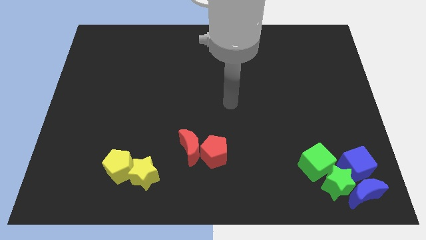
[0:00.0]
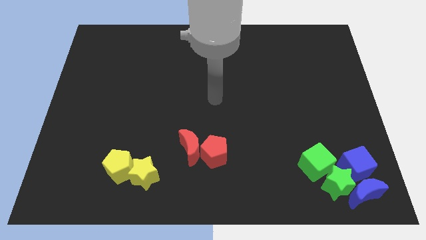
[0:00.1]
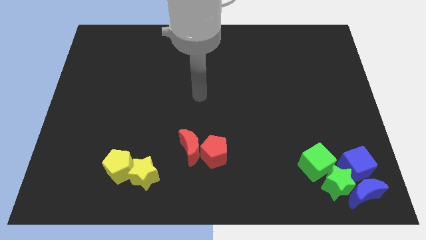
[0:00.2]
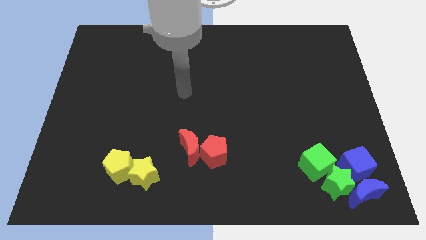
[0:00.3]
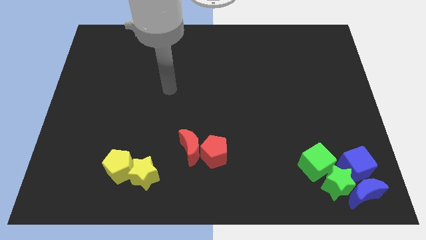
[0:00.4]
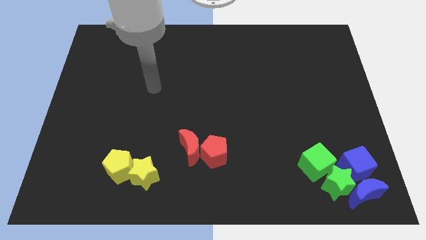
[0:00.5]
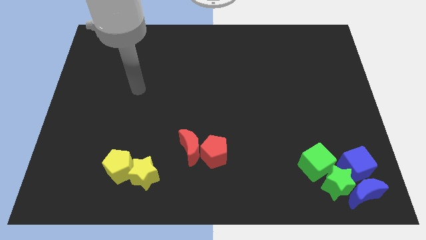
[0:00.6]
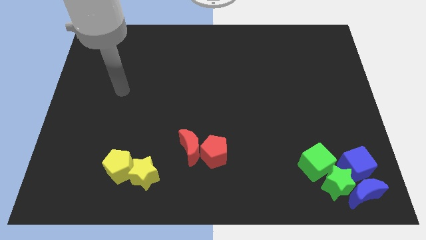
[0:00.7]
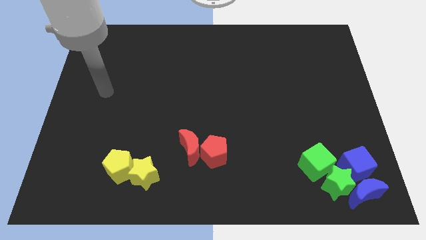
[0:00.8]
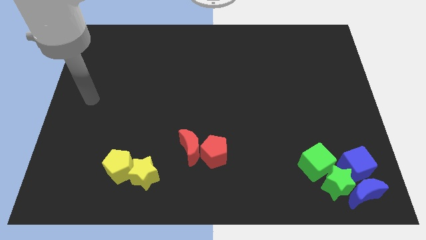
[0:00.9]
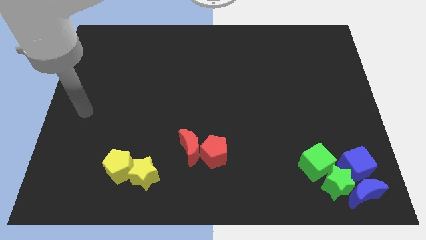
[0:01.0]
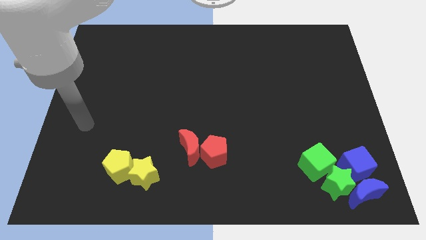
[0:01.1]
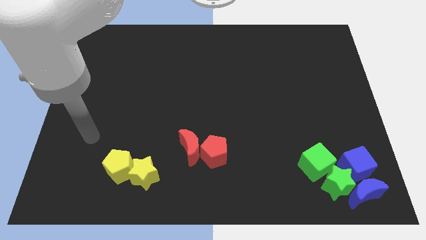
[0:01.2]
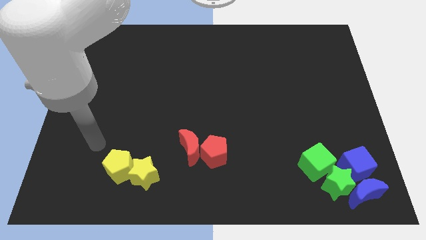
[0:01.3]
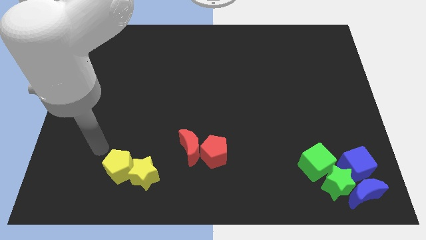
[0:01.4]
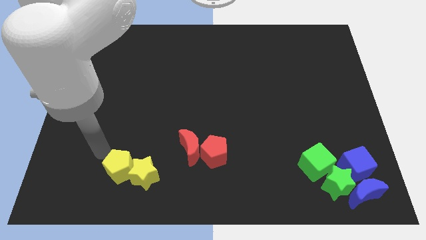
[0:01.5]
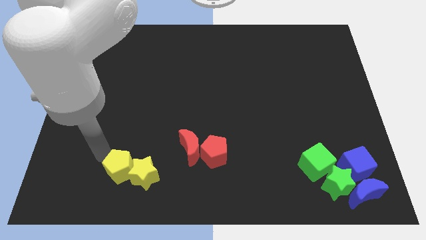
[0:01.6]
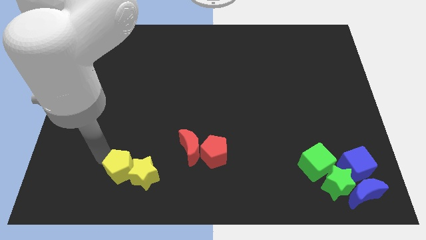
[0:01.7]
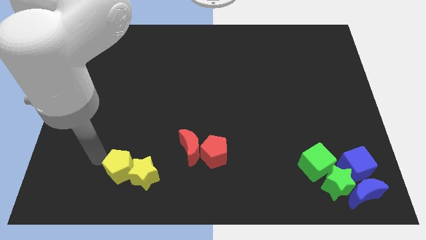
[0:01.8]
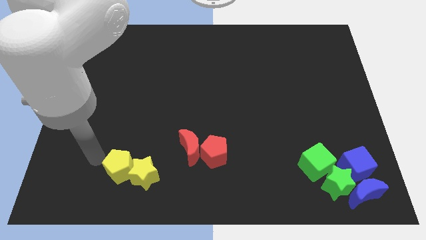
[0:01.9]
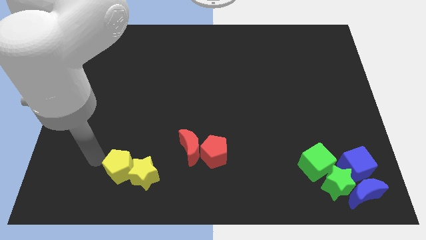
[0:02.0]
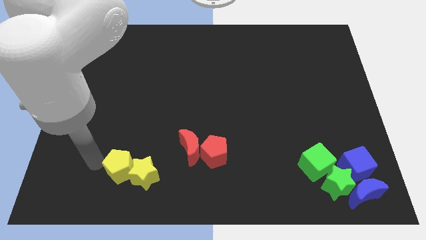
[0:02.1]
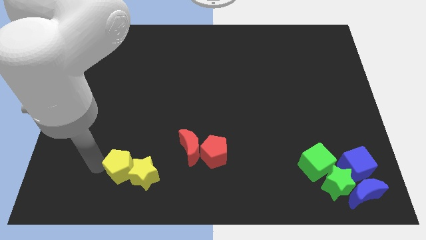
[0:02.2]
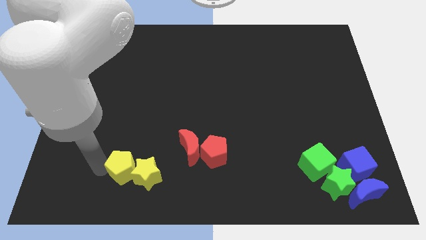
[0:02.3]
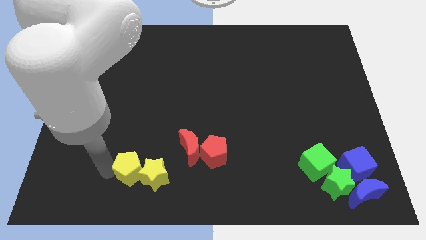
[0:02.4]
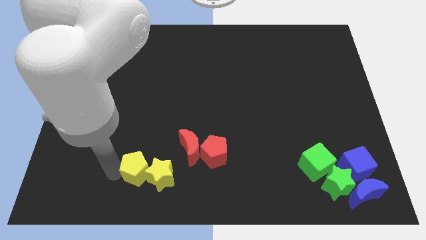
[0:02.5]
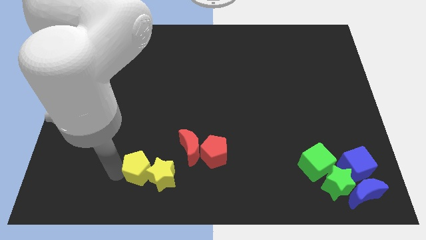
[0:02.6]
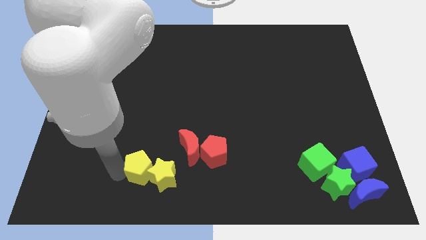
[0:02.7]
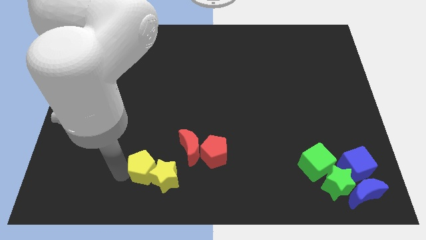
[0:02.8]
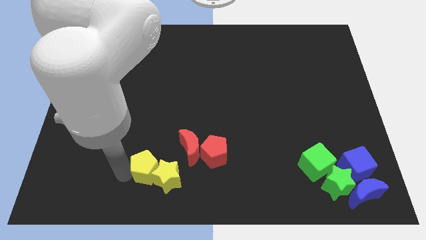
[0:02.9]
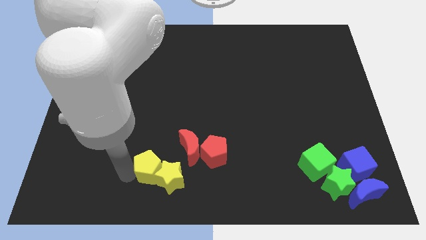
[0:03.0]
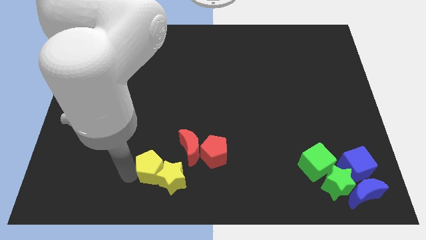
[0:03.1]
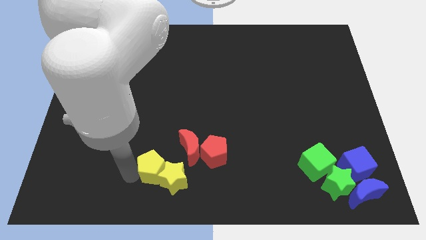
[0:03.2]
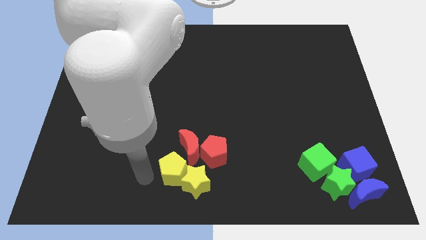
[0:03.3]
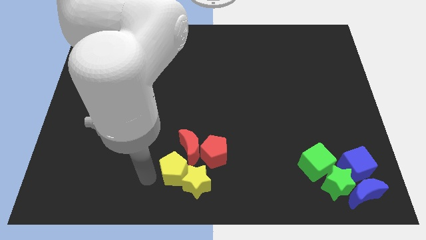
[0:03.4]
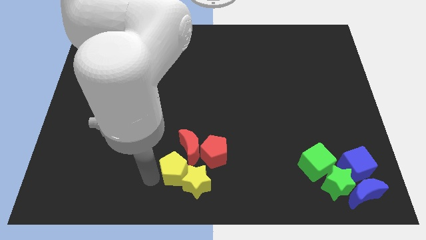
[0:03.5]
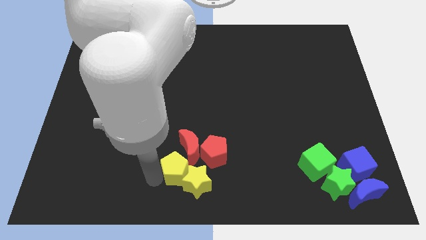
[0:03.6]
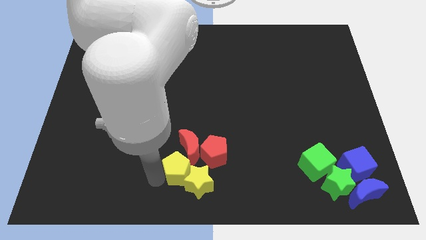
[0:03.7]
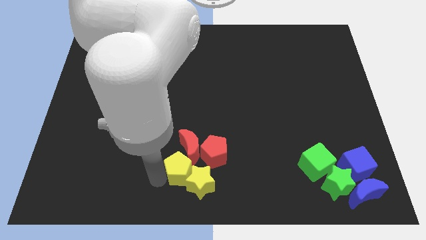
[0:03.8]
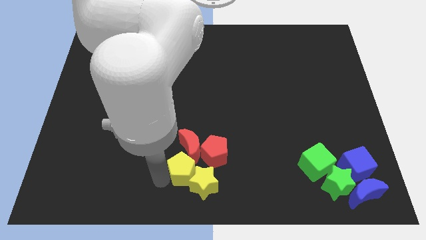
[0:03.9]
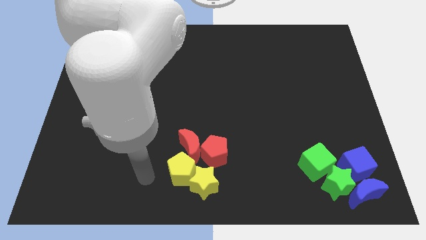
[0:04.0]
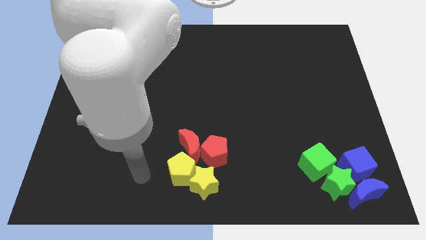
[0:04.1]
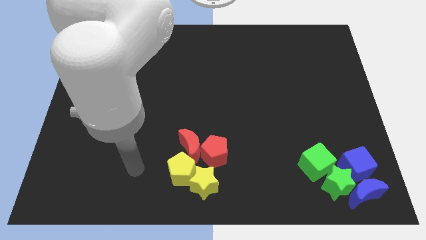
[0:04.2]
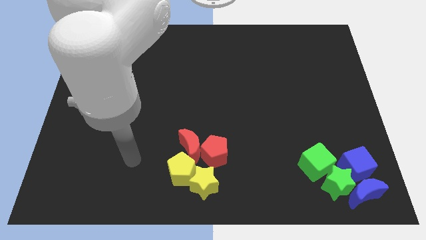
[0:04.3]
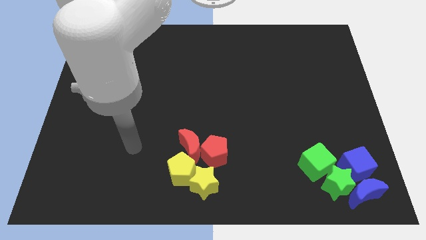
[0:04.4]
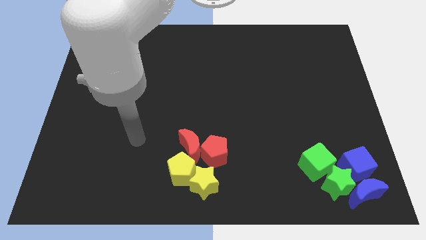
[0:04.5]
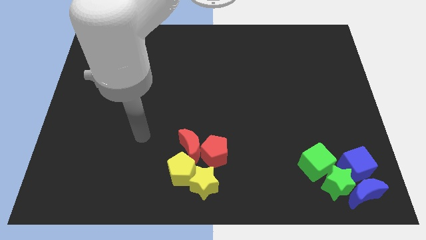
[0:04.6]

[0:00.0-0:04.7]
place the yellow blocks below the red blocks

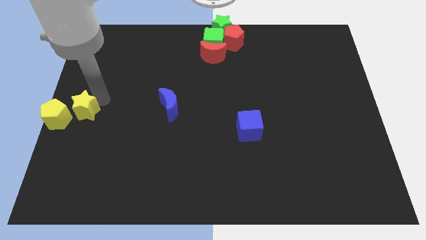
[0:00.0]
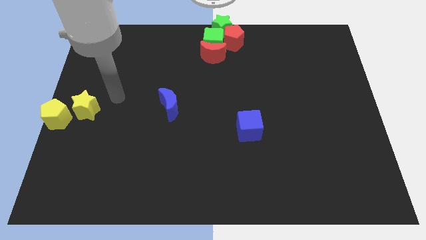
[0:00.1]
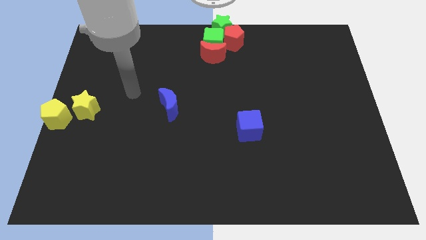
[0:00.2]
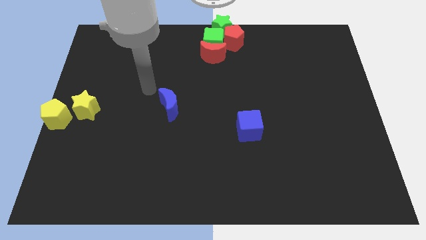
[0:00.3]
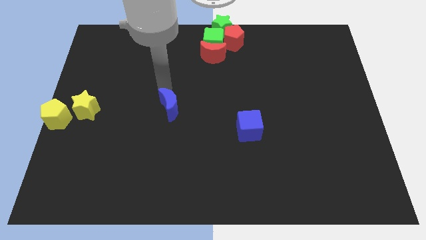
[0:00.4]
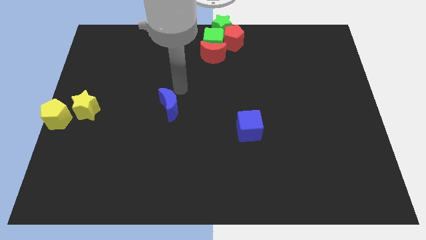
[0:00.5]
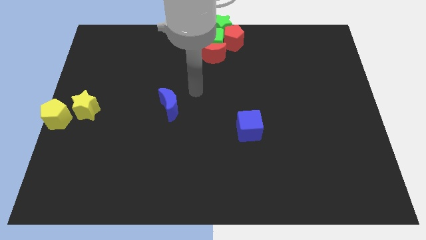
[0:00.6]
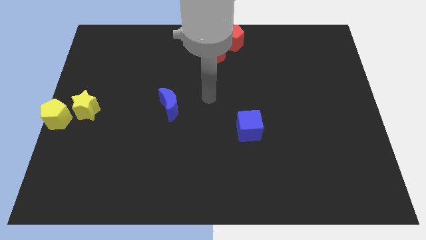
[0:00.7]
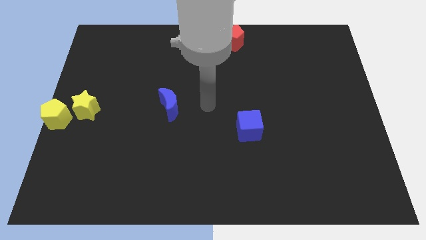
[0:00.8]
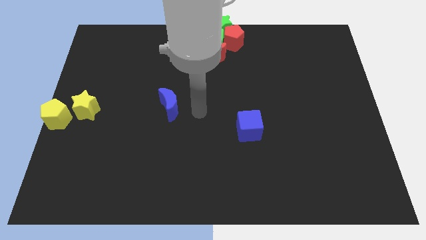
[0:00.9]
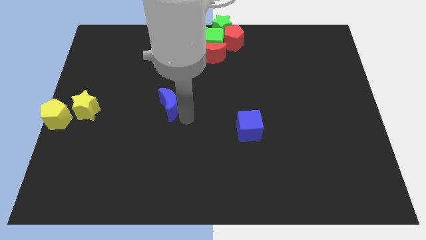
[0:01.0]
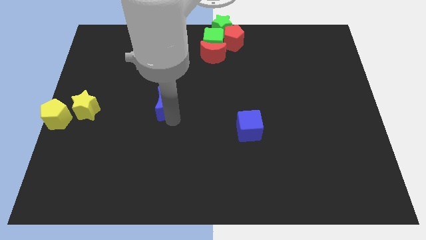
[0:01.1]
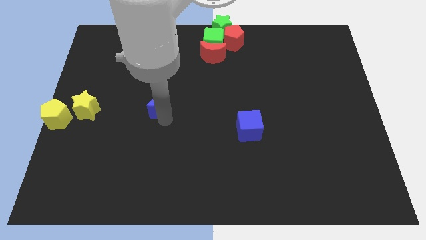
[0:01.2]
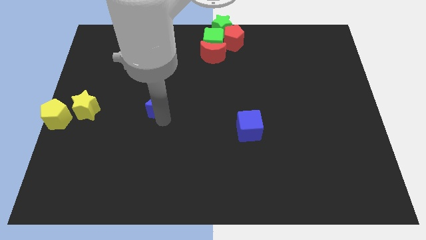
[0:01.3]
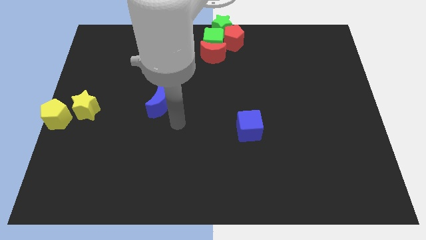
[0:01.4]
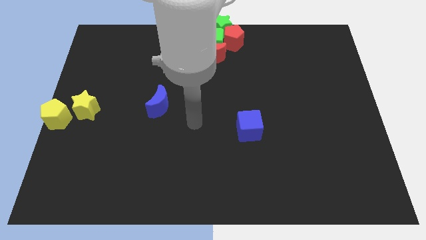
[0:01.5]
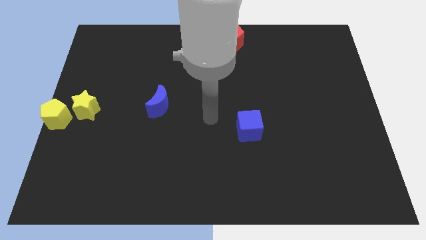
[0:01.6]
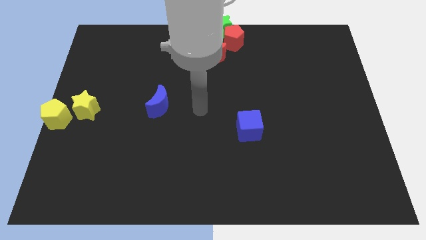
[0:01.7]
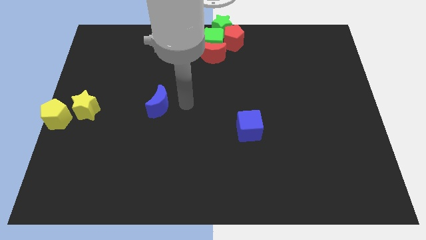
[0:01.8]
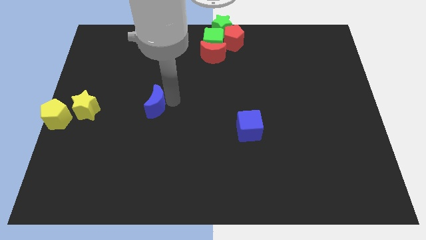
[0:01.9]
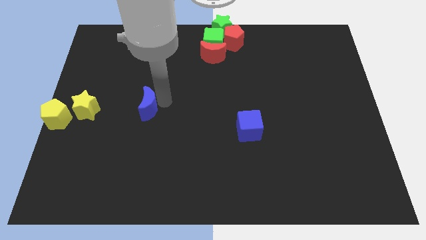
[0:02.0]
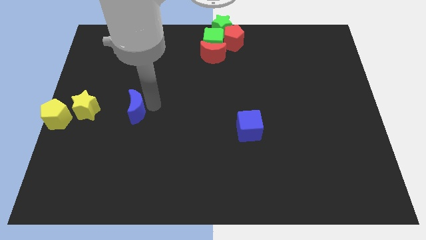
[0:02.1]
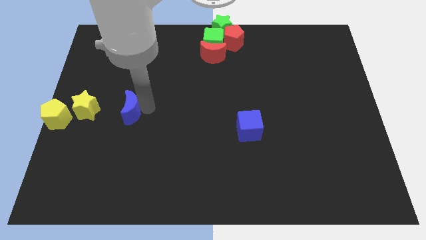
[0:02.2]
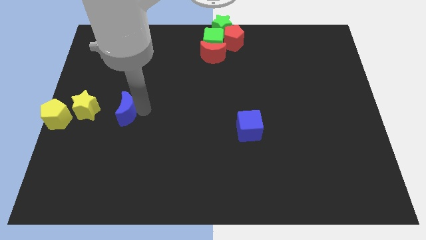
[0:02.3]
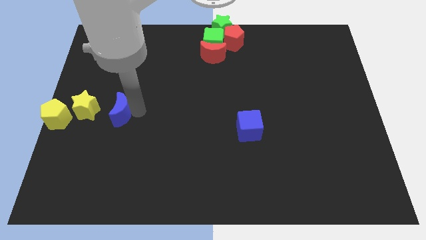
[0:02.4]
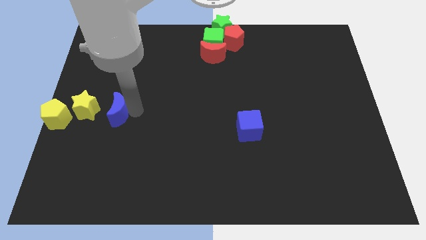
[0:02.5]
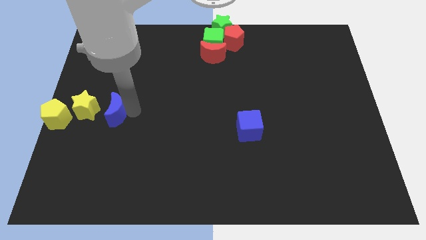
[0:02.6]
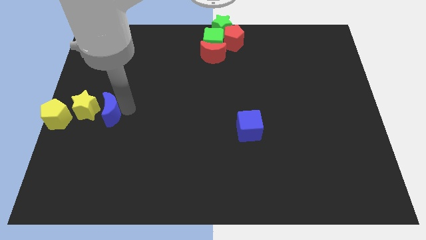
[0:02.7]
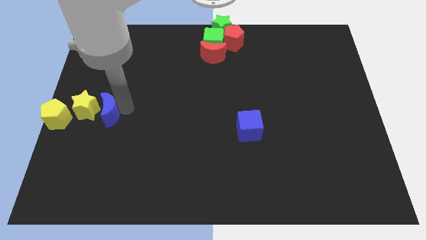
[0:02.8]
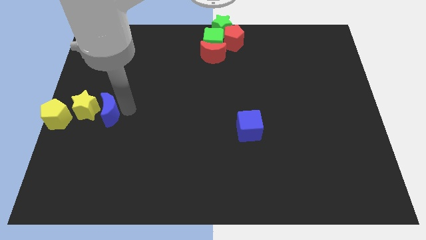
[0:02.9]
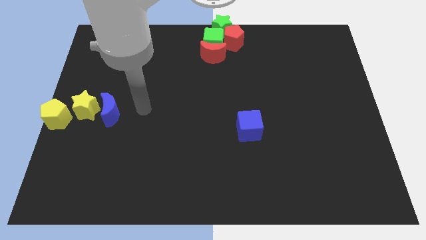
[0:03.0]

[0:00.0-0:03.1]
place blue moon to the right of yellow star

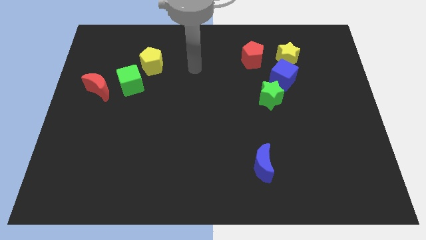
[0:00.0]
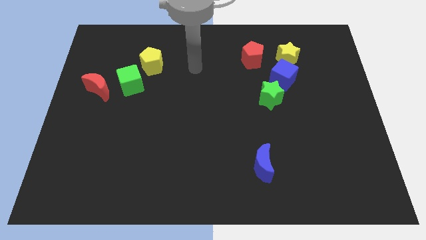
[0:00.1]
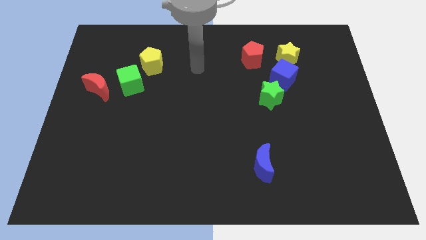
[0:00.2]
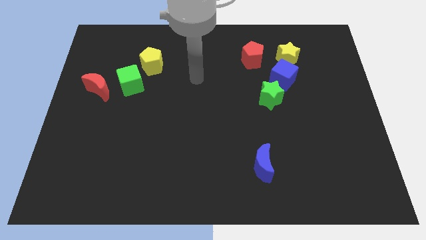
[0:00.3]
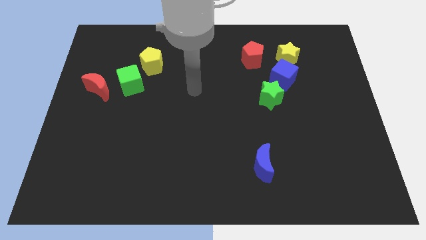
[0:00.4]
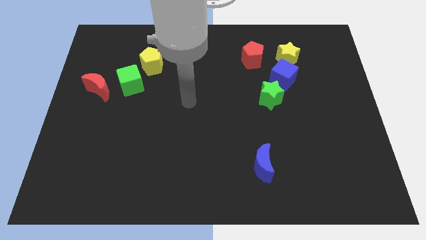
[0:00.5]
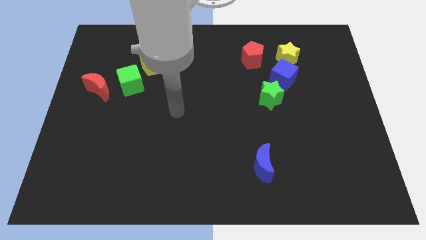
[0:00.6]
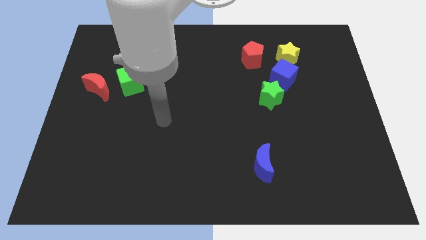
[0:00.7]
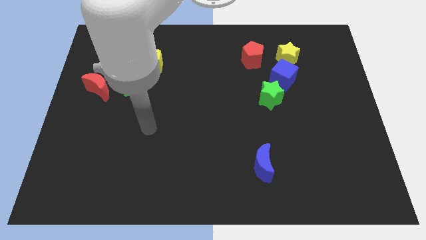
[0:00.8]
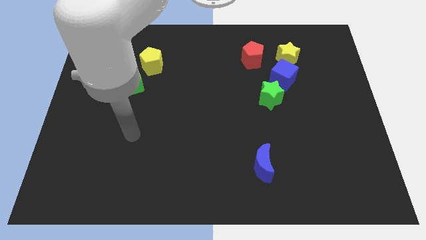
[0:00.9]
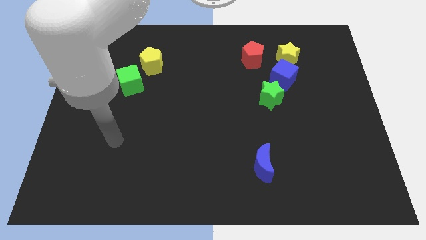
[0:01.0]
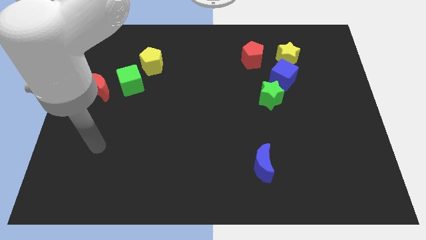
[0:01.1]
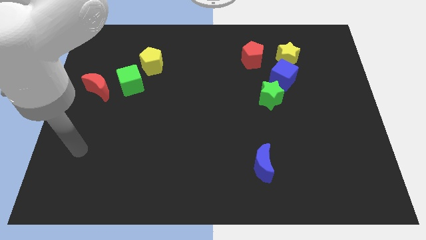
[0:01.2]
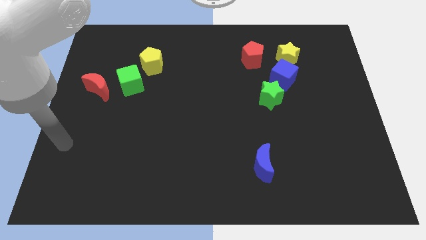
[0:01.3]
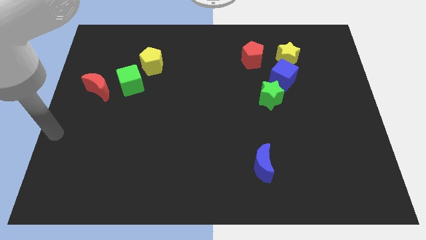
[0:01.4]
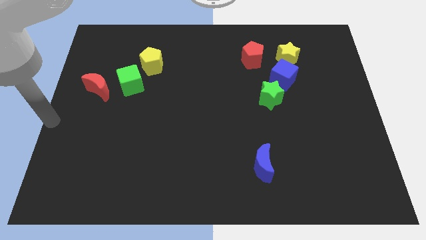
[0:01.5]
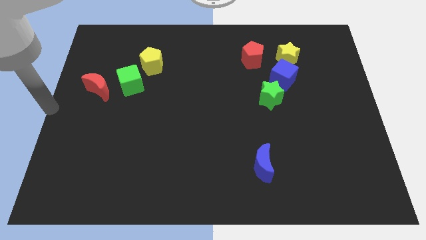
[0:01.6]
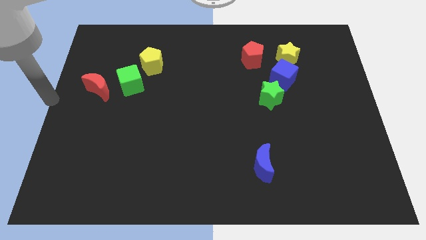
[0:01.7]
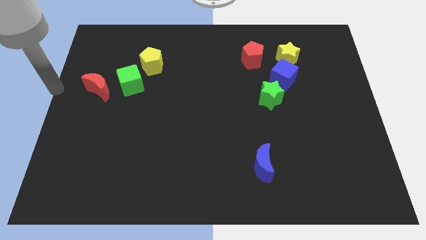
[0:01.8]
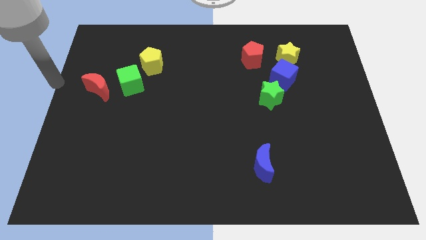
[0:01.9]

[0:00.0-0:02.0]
push the arm towards the red crescent
